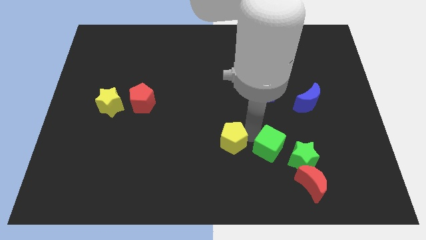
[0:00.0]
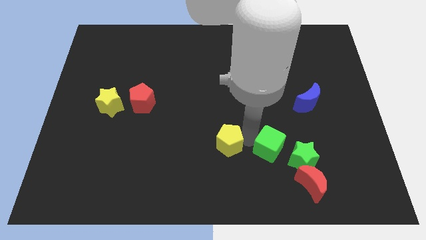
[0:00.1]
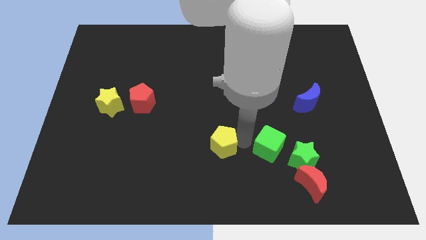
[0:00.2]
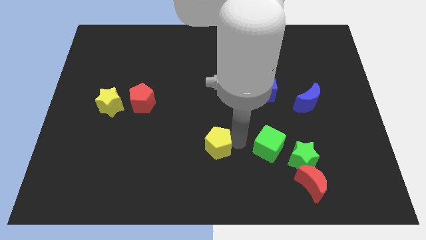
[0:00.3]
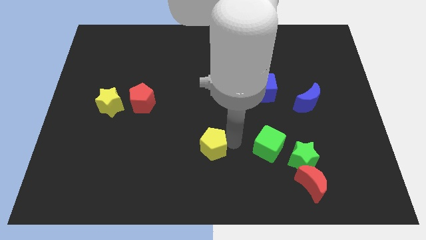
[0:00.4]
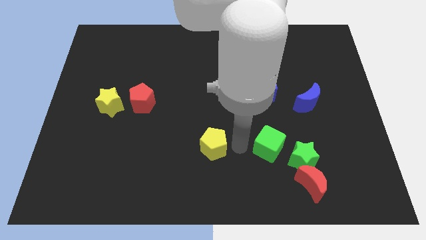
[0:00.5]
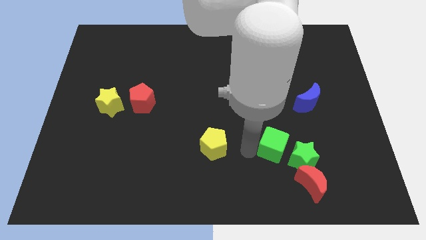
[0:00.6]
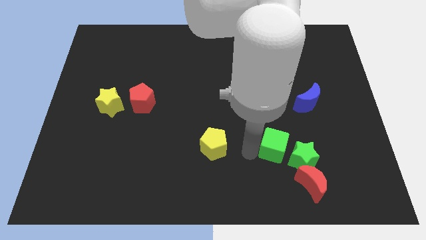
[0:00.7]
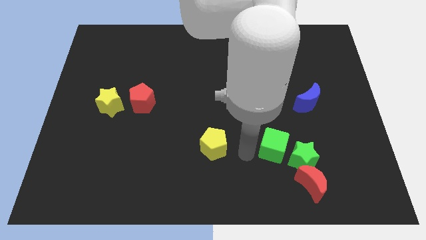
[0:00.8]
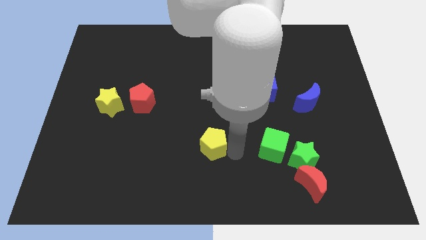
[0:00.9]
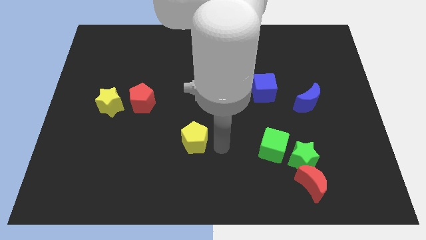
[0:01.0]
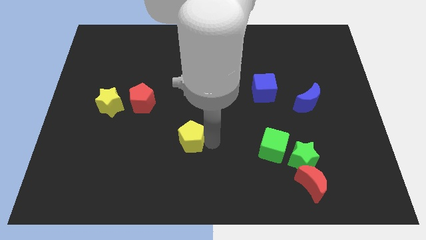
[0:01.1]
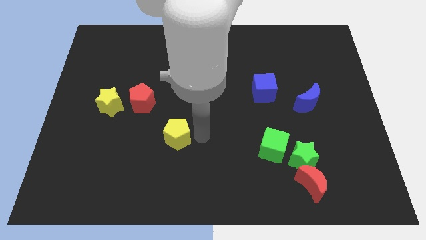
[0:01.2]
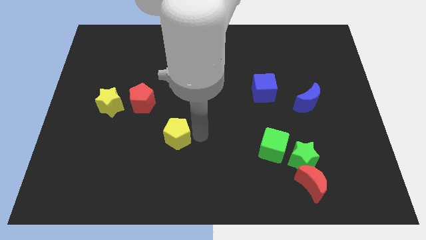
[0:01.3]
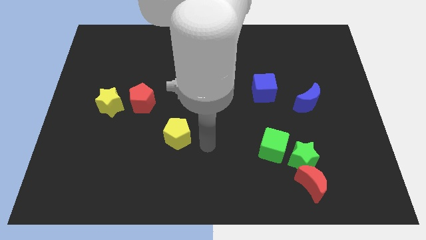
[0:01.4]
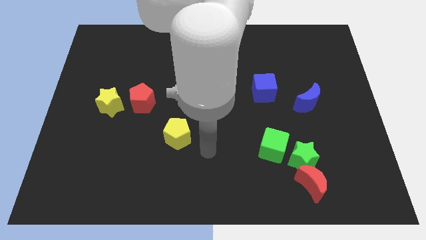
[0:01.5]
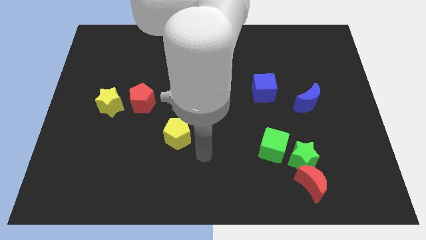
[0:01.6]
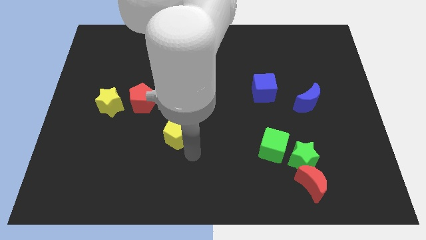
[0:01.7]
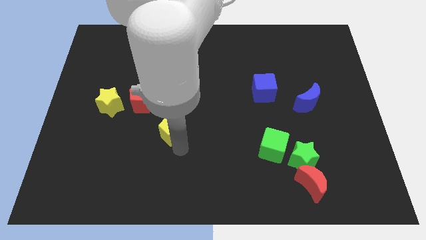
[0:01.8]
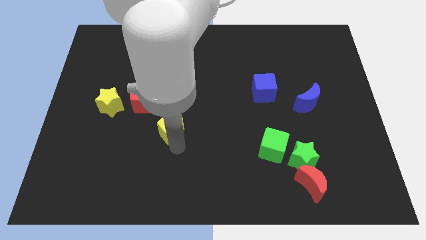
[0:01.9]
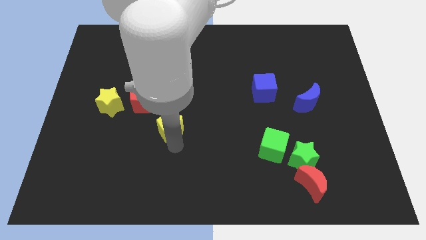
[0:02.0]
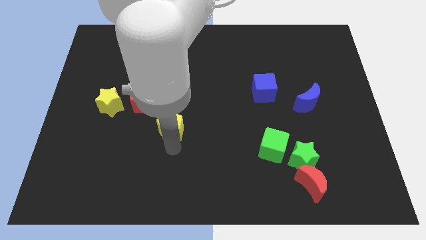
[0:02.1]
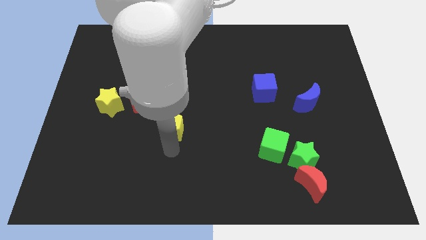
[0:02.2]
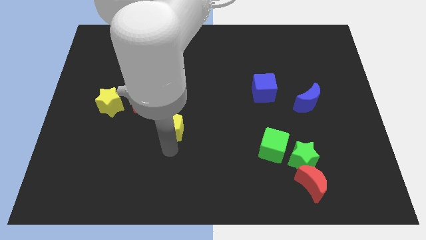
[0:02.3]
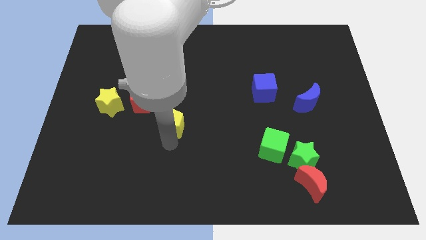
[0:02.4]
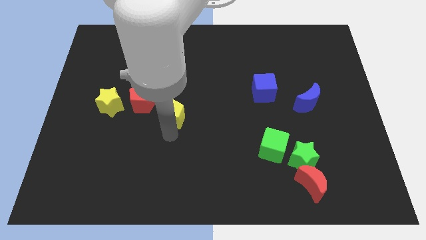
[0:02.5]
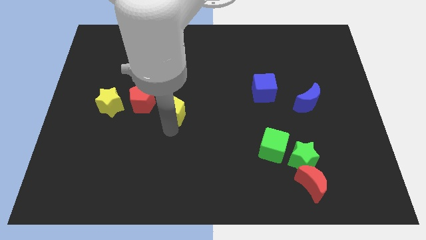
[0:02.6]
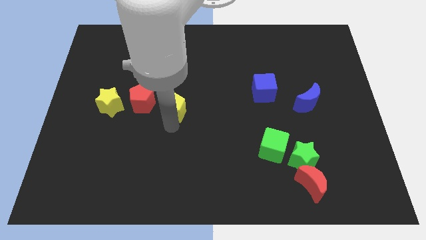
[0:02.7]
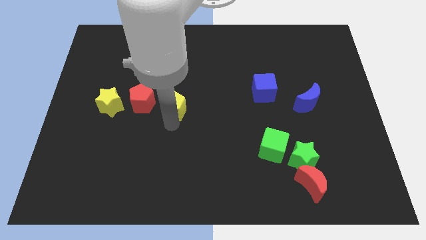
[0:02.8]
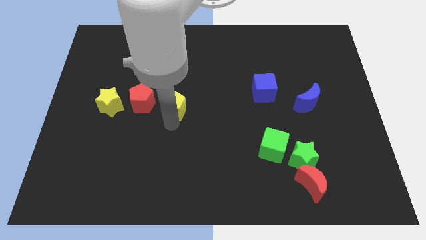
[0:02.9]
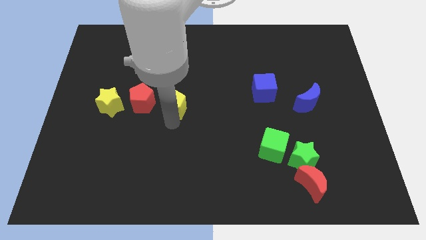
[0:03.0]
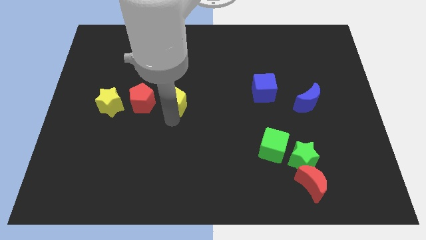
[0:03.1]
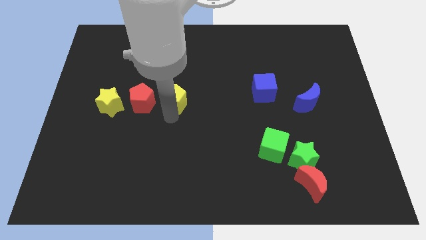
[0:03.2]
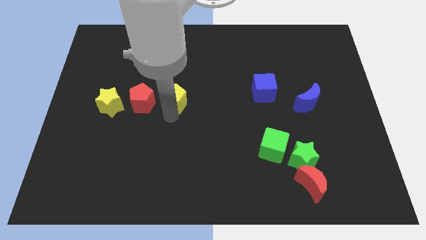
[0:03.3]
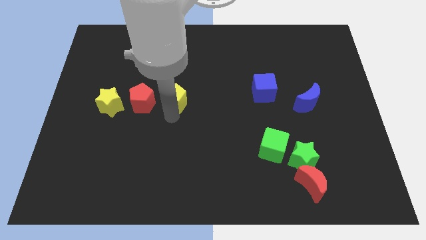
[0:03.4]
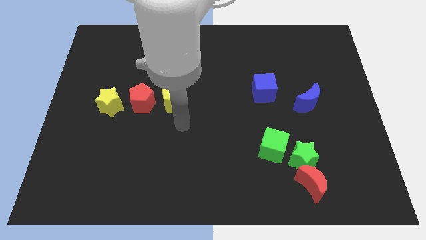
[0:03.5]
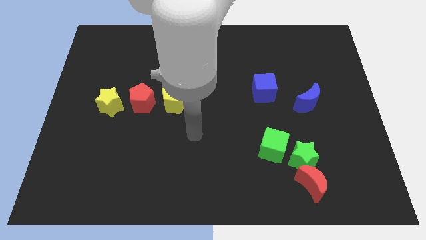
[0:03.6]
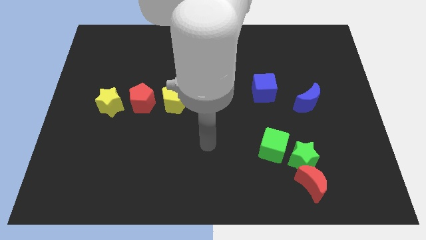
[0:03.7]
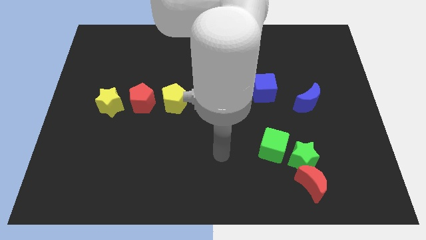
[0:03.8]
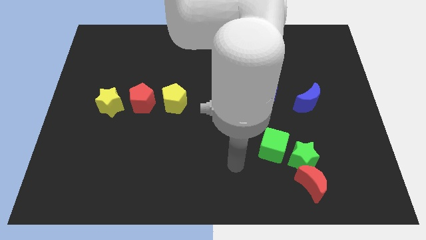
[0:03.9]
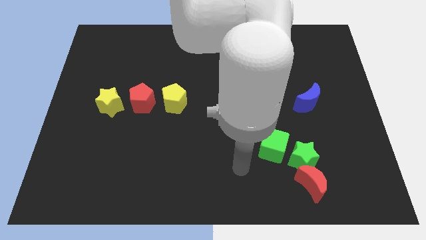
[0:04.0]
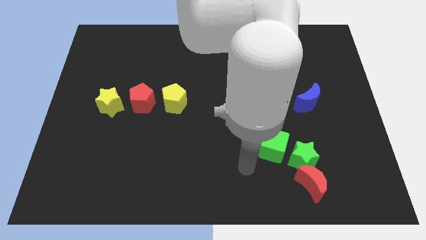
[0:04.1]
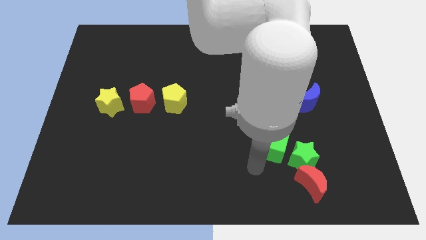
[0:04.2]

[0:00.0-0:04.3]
place the yellow pentagon beside the red pentagon

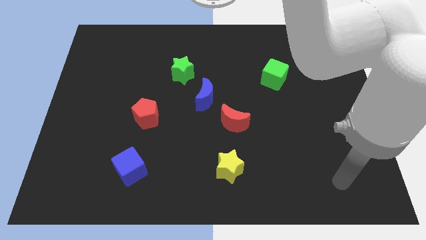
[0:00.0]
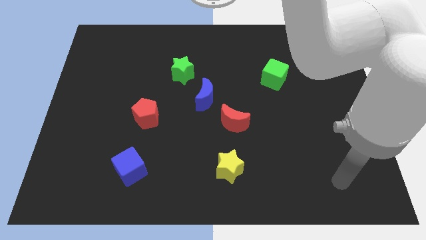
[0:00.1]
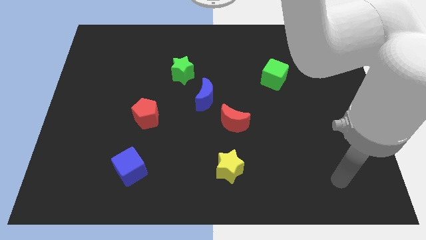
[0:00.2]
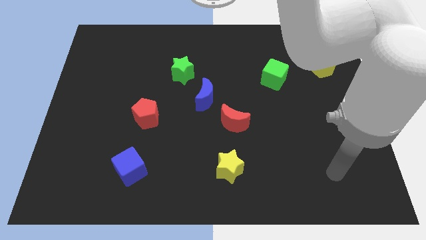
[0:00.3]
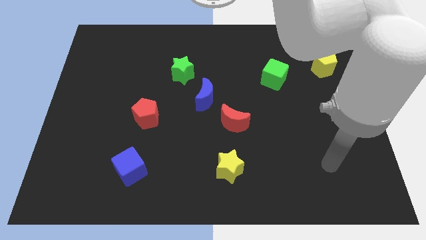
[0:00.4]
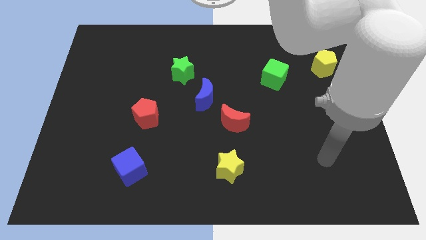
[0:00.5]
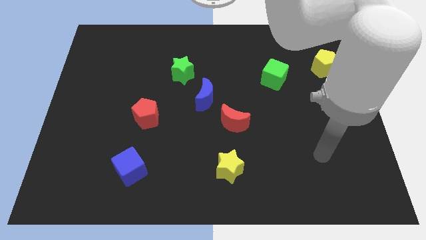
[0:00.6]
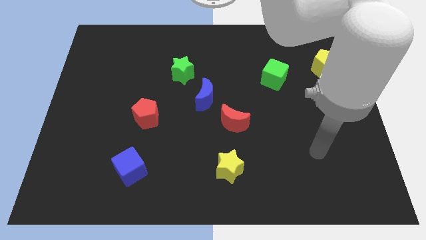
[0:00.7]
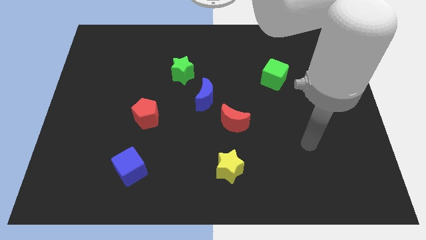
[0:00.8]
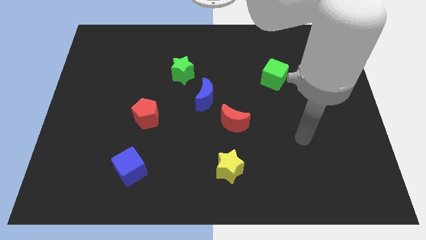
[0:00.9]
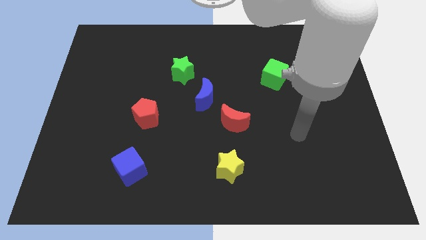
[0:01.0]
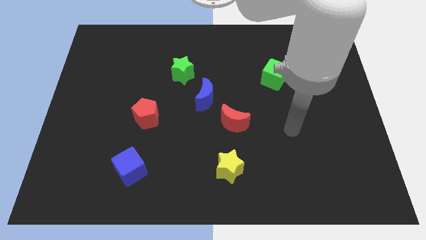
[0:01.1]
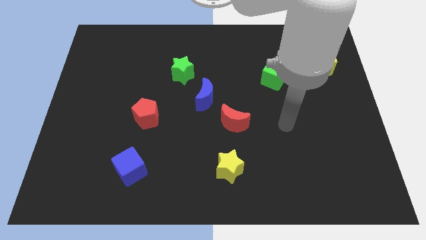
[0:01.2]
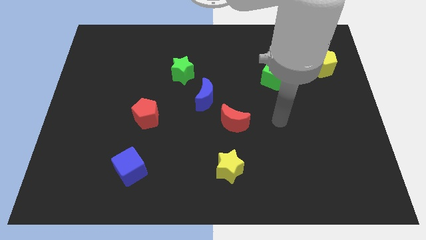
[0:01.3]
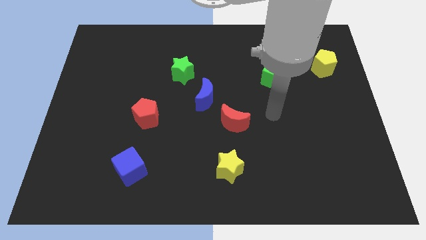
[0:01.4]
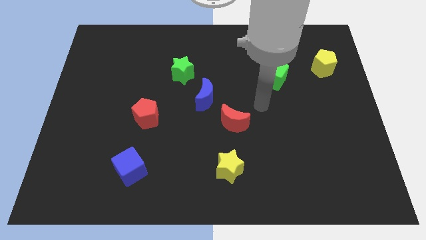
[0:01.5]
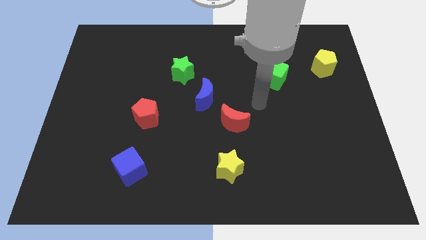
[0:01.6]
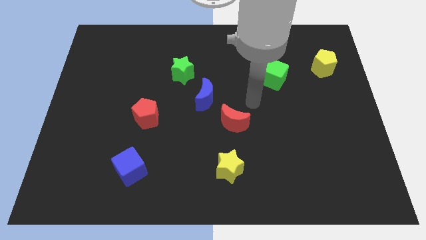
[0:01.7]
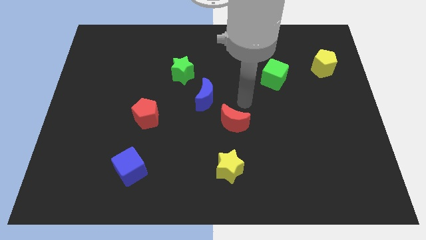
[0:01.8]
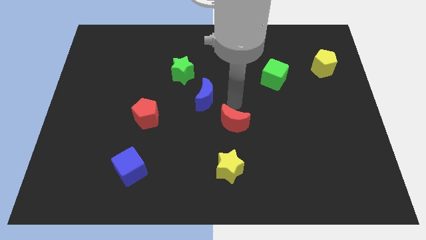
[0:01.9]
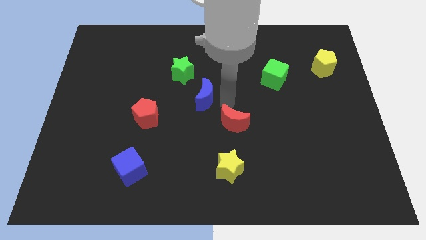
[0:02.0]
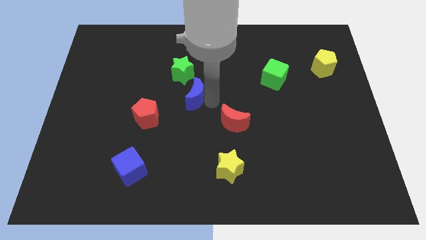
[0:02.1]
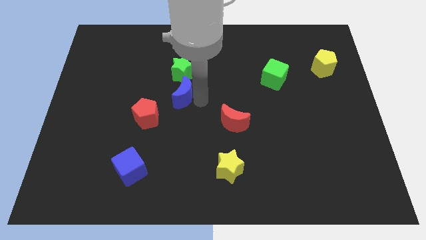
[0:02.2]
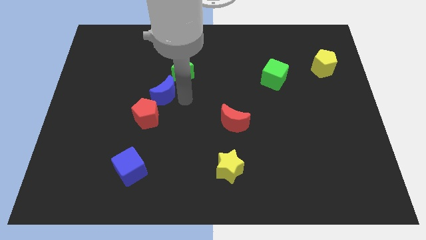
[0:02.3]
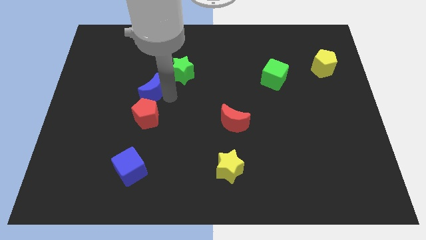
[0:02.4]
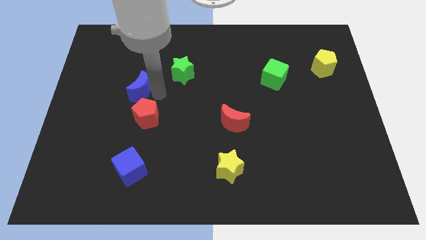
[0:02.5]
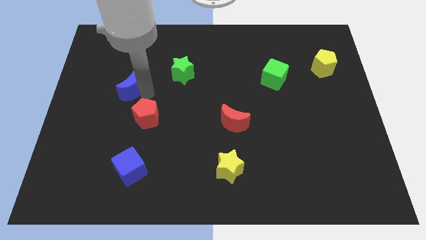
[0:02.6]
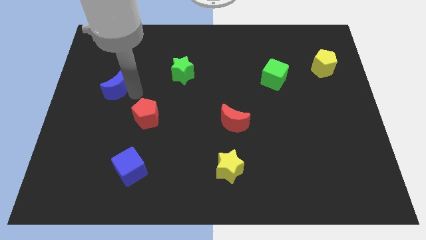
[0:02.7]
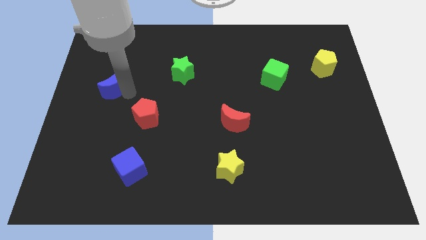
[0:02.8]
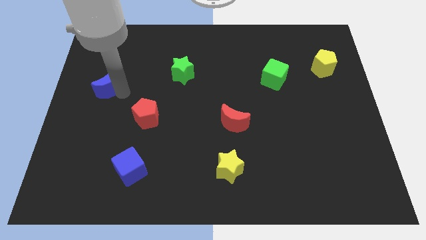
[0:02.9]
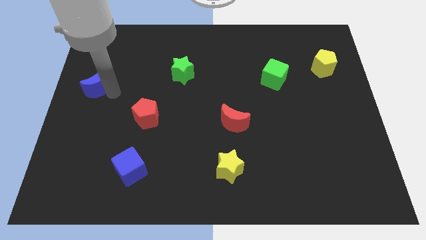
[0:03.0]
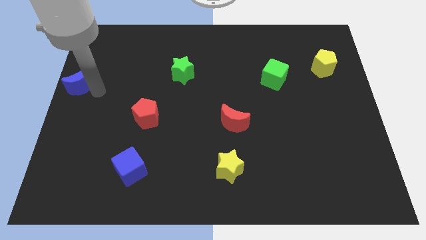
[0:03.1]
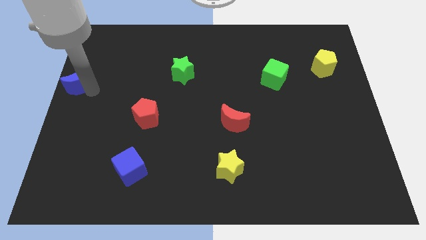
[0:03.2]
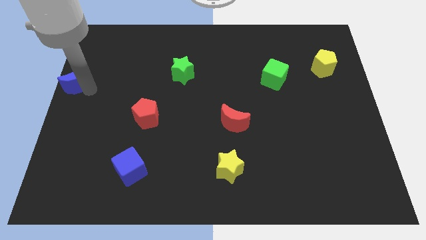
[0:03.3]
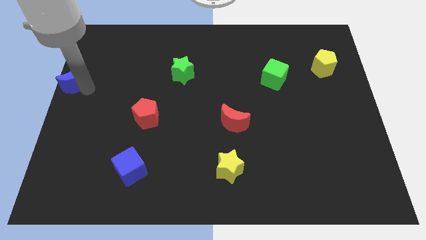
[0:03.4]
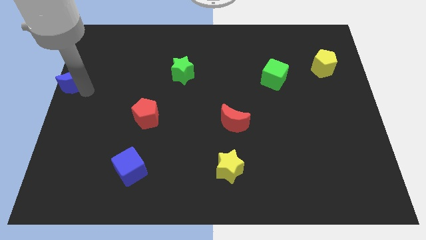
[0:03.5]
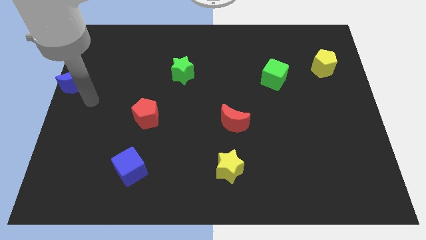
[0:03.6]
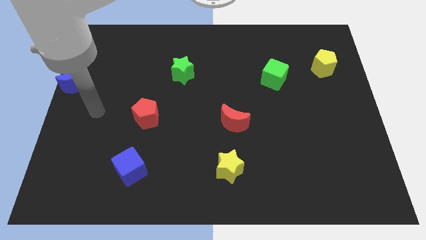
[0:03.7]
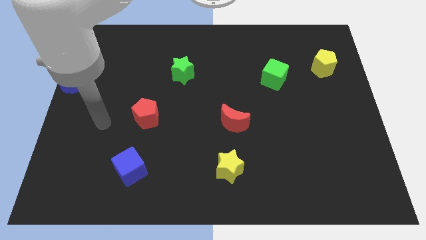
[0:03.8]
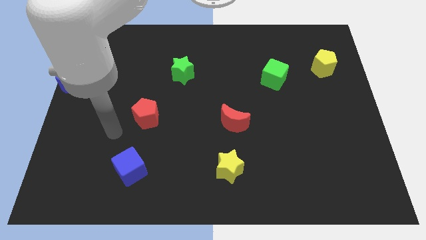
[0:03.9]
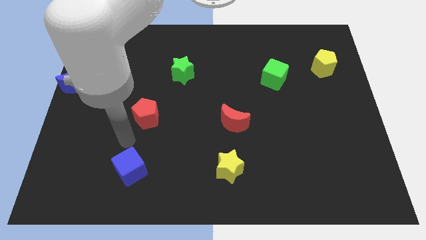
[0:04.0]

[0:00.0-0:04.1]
move the blue crescent towards the center left of the board

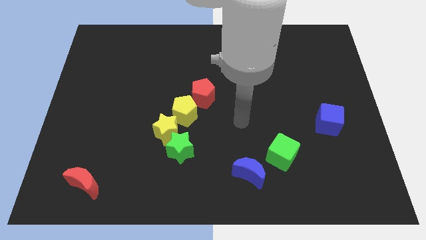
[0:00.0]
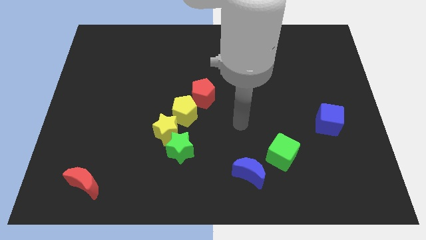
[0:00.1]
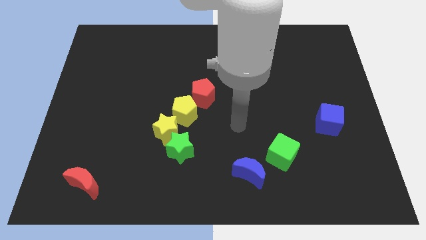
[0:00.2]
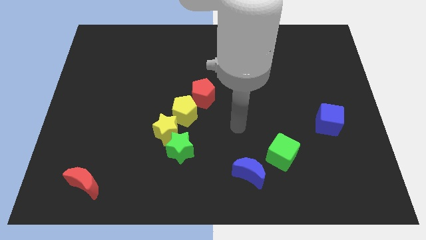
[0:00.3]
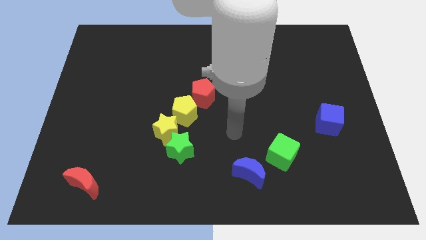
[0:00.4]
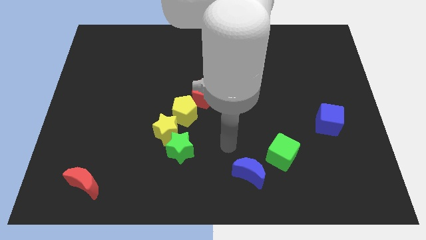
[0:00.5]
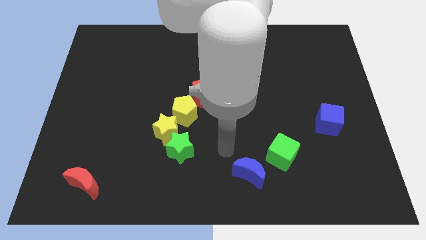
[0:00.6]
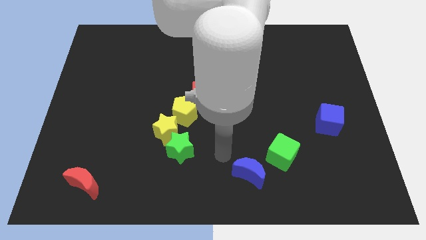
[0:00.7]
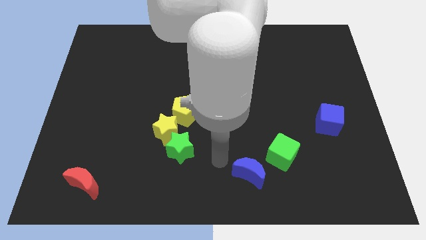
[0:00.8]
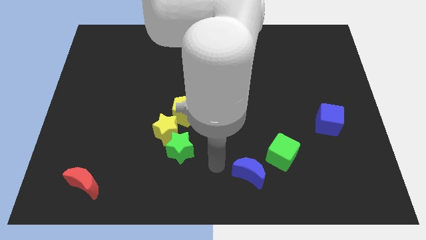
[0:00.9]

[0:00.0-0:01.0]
move your hand in between the green star and blue moon
